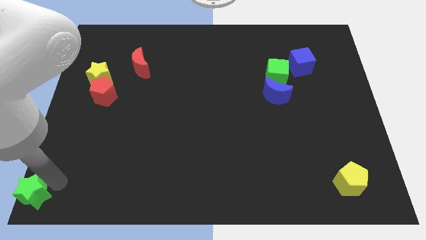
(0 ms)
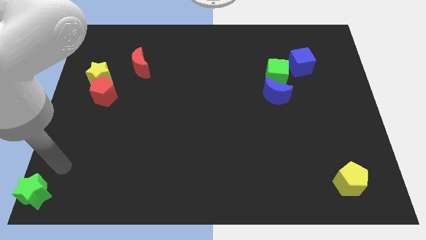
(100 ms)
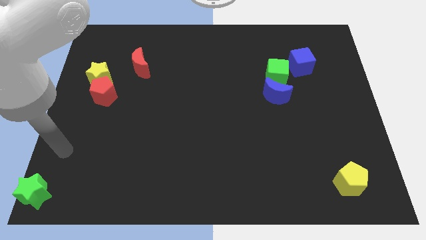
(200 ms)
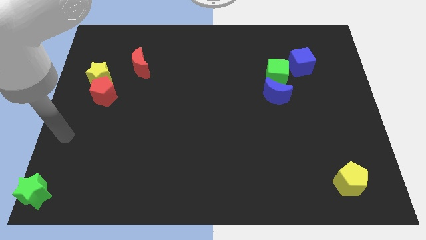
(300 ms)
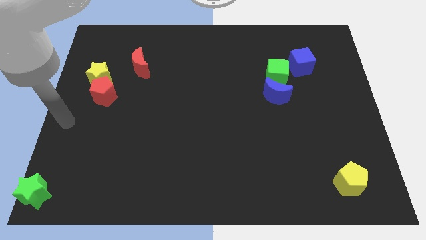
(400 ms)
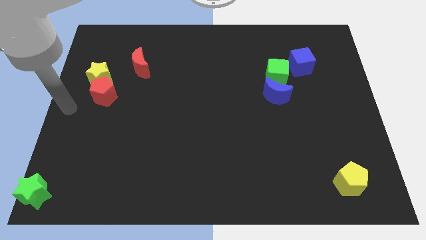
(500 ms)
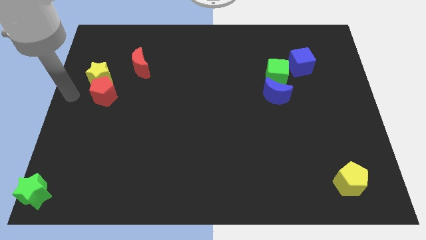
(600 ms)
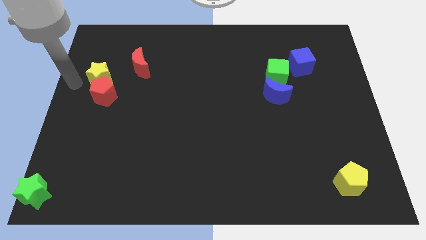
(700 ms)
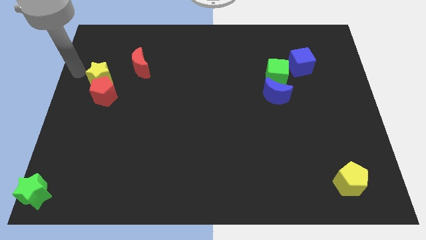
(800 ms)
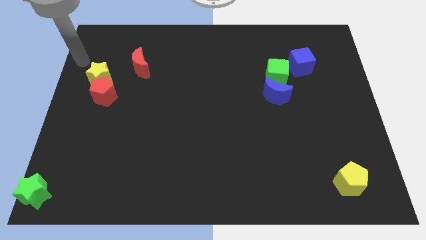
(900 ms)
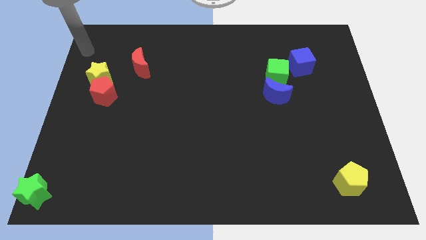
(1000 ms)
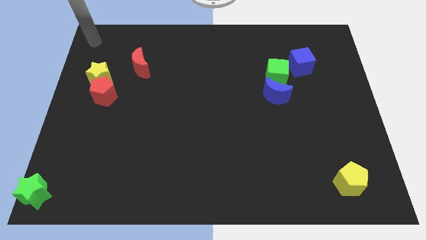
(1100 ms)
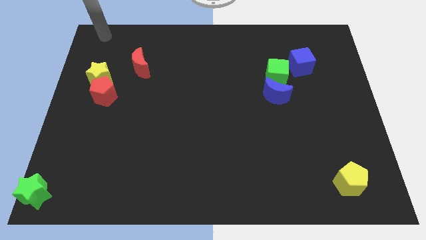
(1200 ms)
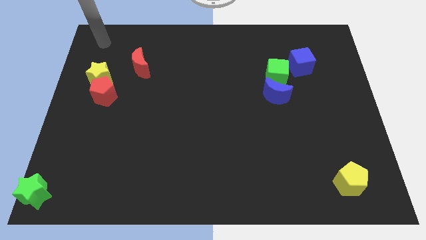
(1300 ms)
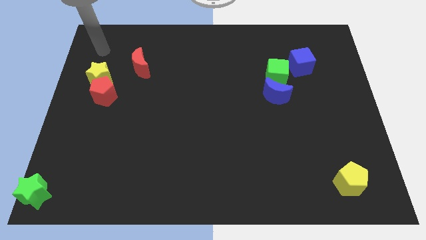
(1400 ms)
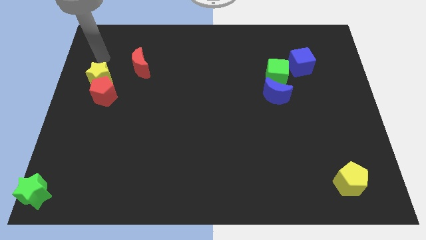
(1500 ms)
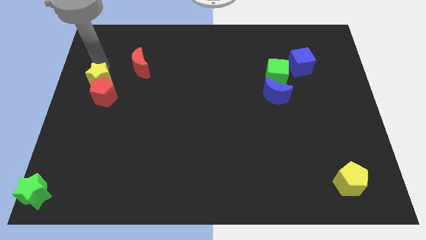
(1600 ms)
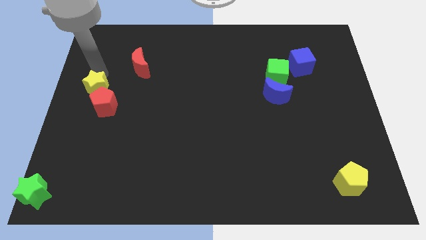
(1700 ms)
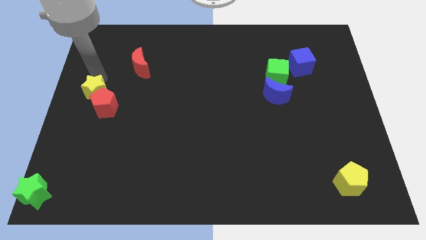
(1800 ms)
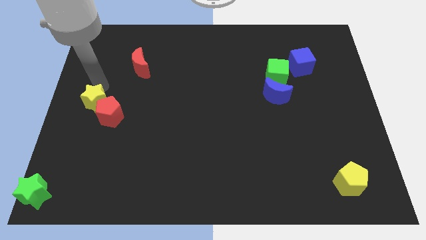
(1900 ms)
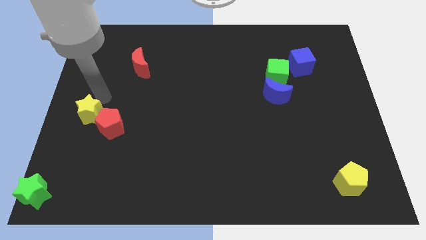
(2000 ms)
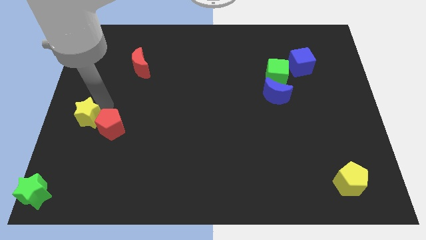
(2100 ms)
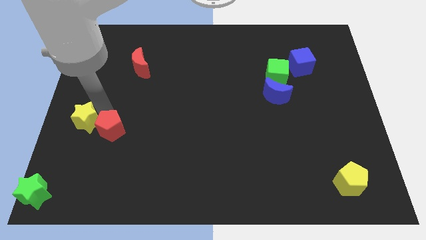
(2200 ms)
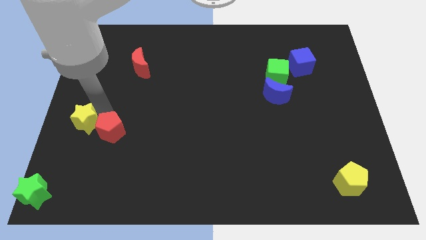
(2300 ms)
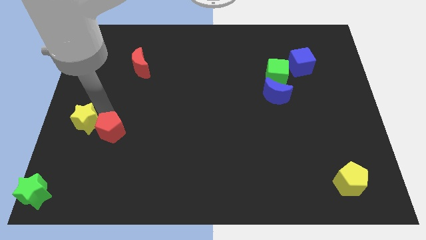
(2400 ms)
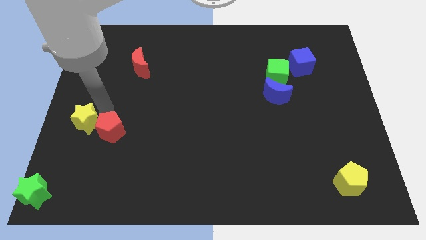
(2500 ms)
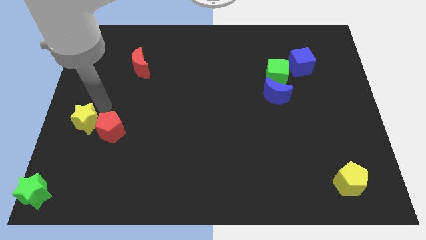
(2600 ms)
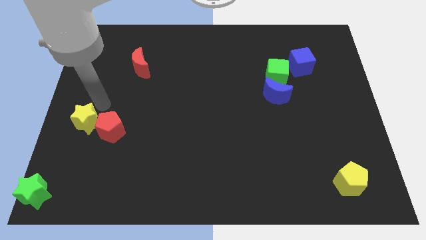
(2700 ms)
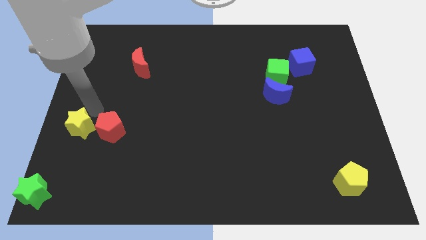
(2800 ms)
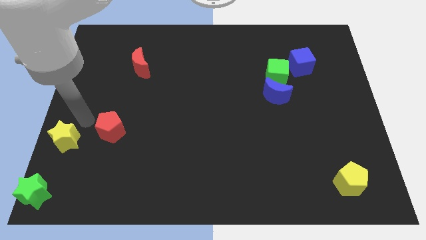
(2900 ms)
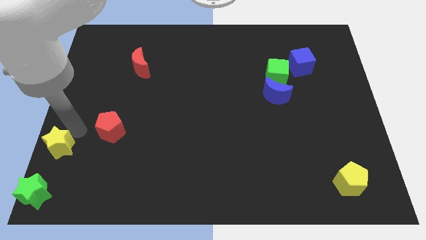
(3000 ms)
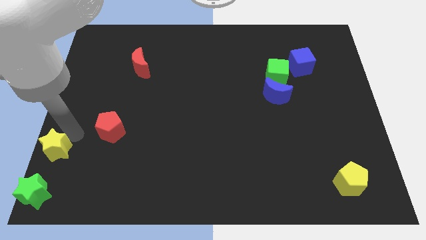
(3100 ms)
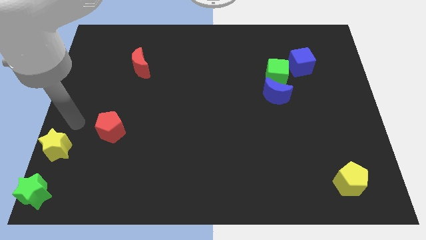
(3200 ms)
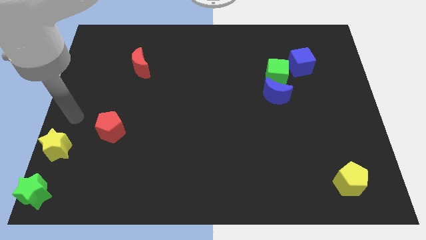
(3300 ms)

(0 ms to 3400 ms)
separate yellow star and the red pentagon

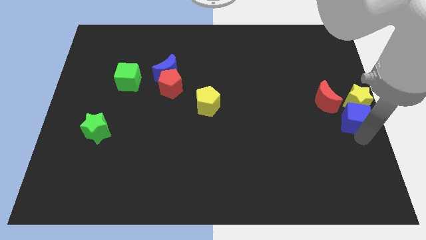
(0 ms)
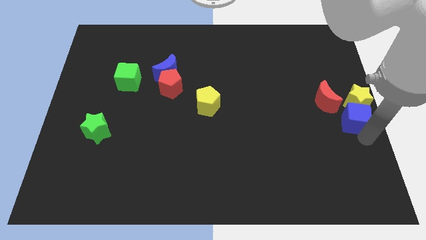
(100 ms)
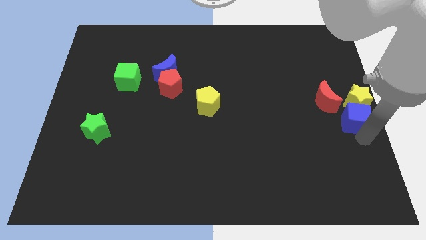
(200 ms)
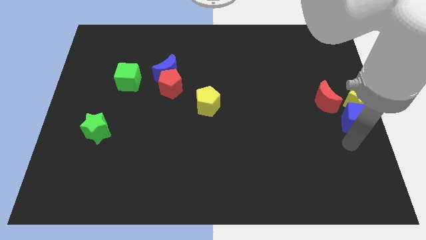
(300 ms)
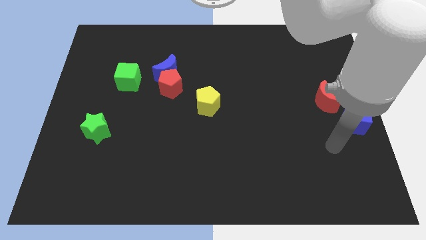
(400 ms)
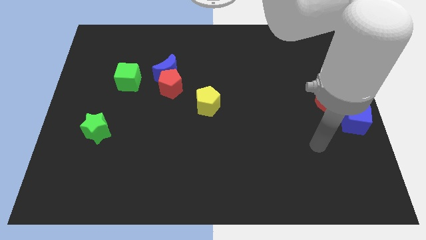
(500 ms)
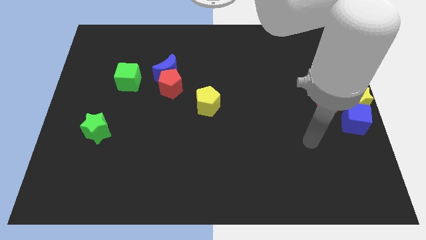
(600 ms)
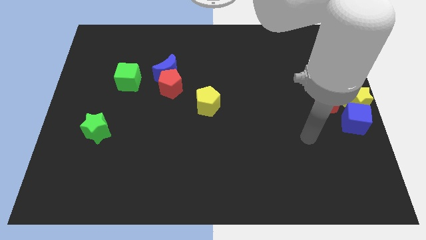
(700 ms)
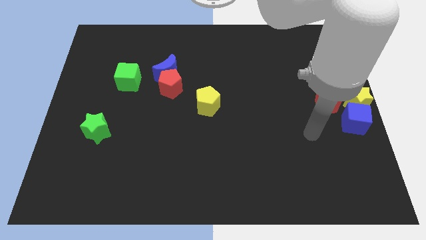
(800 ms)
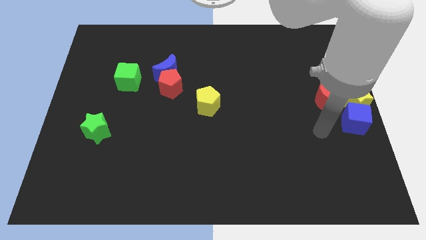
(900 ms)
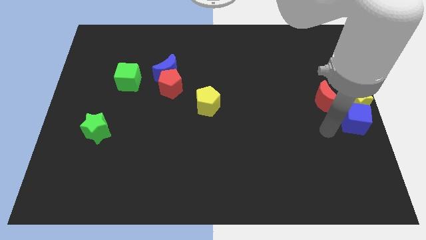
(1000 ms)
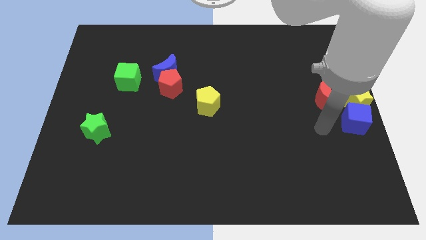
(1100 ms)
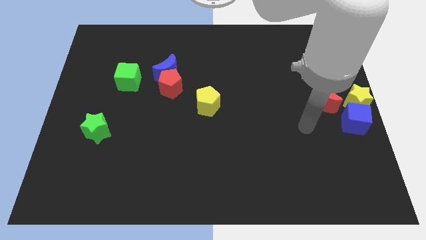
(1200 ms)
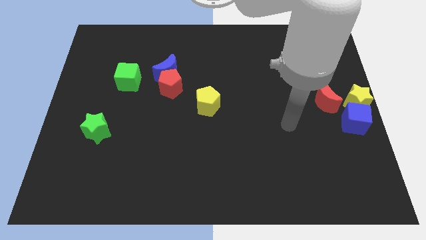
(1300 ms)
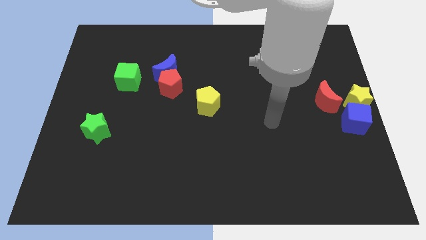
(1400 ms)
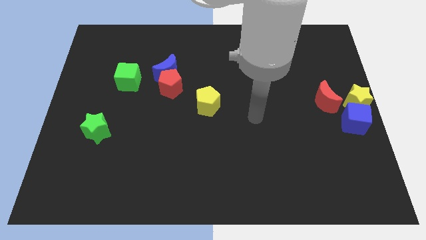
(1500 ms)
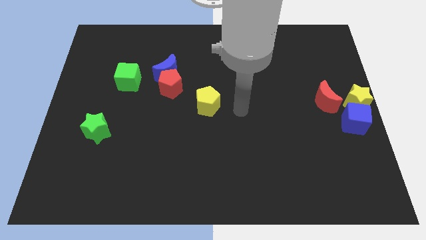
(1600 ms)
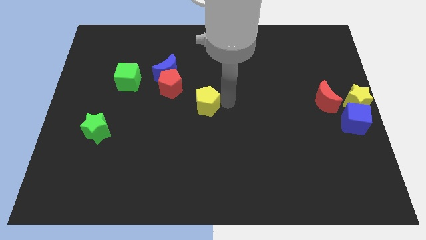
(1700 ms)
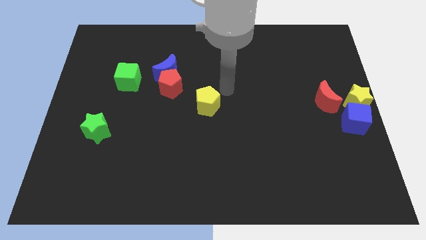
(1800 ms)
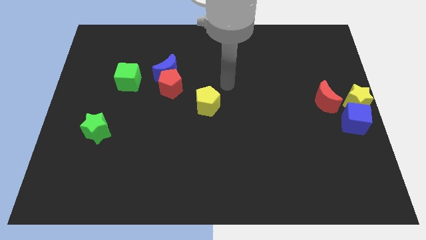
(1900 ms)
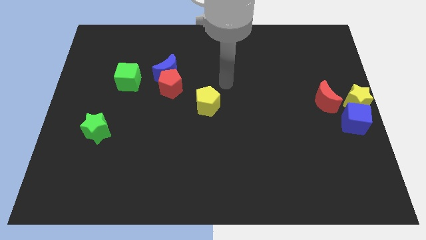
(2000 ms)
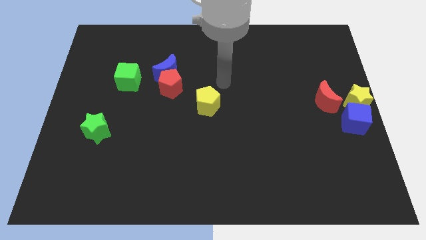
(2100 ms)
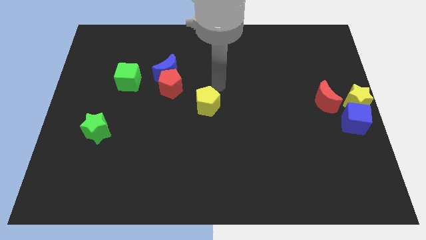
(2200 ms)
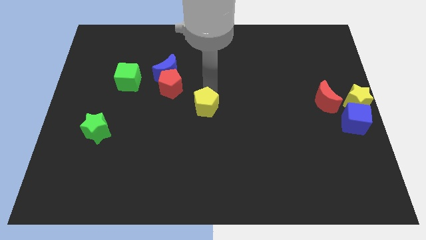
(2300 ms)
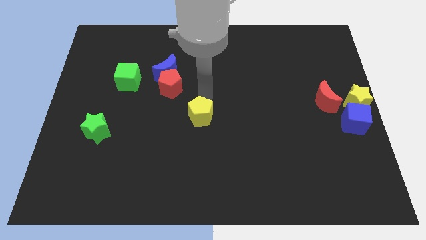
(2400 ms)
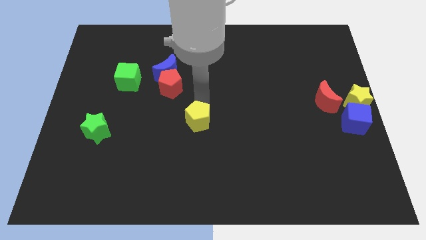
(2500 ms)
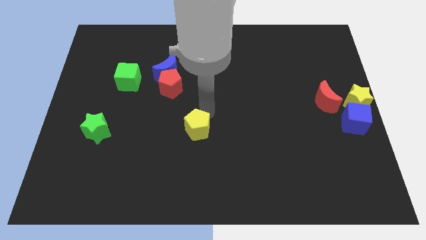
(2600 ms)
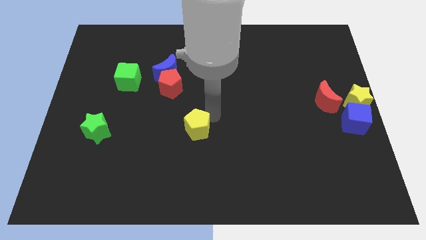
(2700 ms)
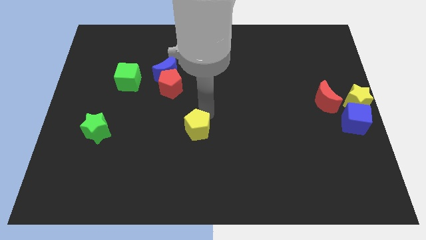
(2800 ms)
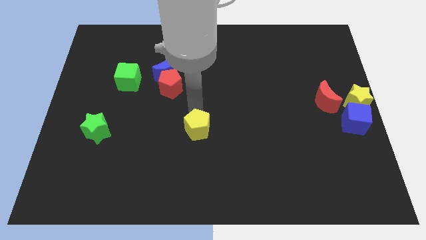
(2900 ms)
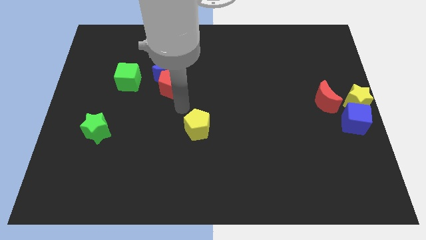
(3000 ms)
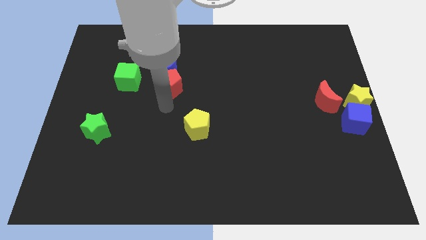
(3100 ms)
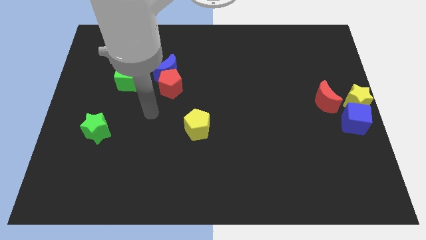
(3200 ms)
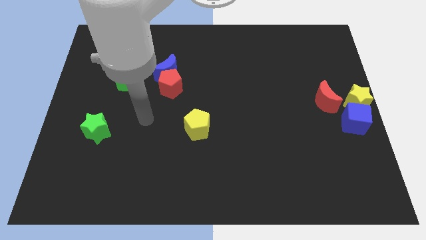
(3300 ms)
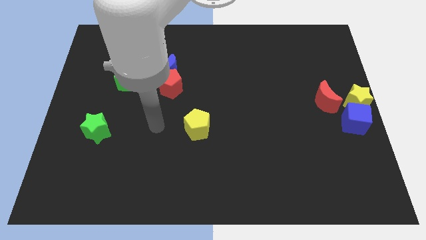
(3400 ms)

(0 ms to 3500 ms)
push the yellow pentagon slightly down

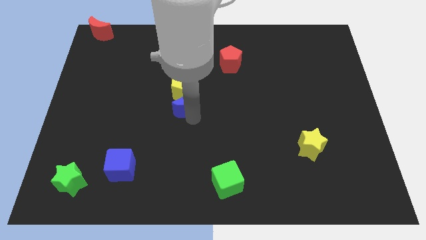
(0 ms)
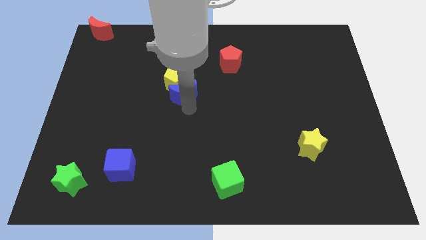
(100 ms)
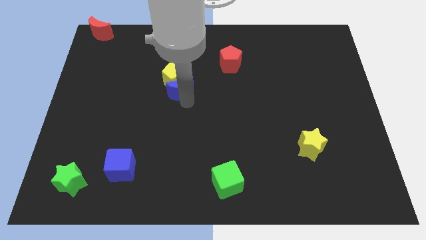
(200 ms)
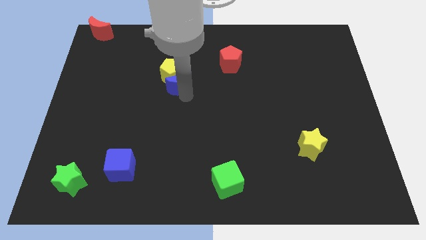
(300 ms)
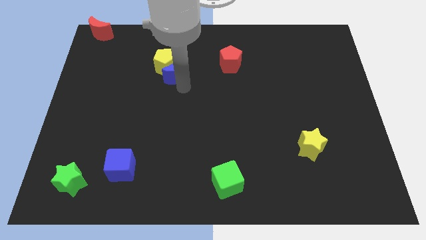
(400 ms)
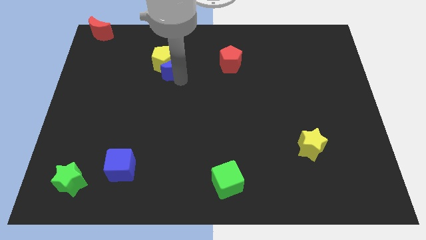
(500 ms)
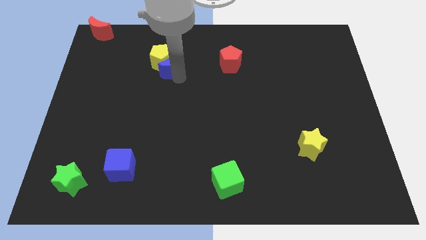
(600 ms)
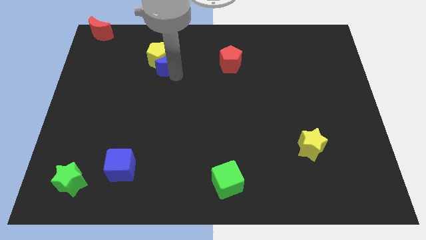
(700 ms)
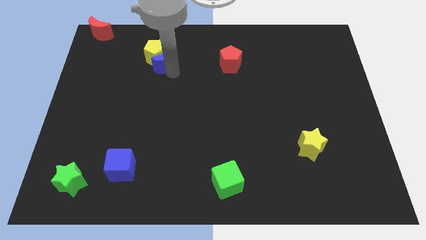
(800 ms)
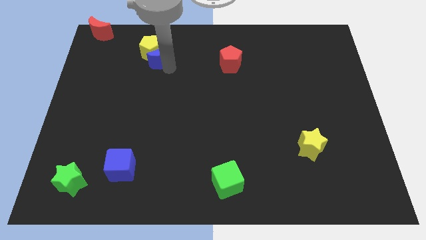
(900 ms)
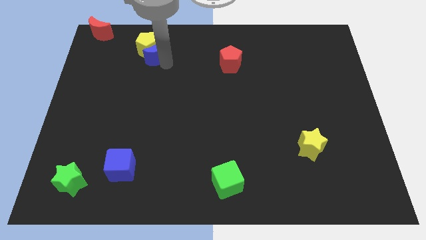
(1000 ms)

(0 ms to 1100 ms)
drag the blue moon to the top left

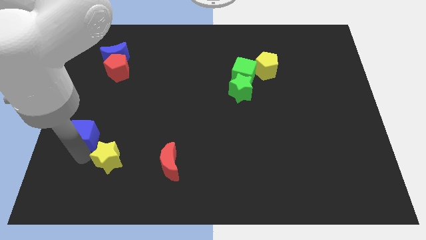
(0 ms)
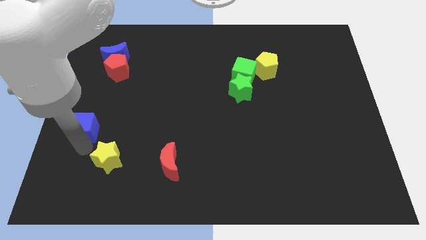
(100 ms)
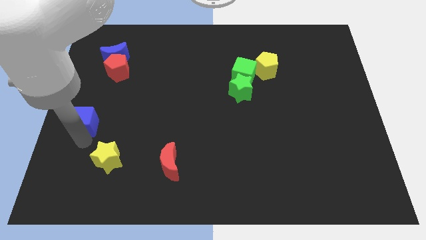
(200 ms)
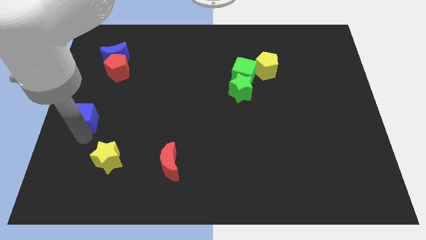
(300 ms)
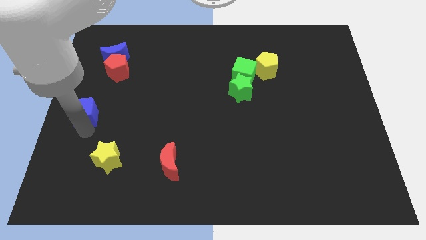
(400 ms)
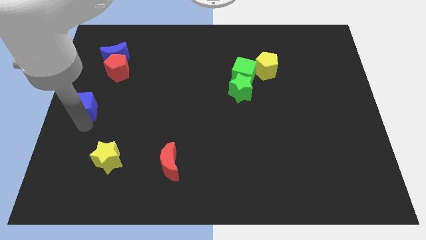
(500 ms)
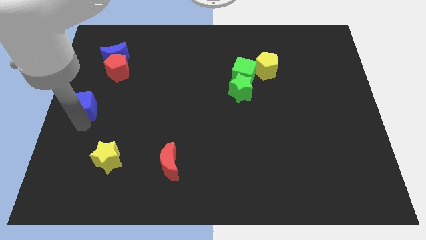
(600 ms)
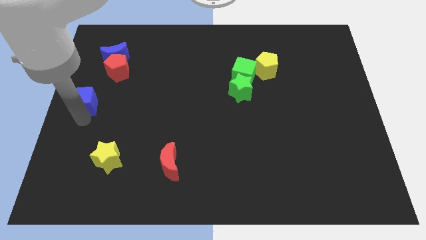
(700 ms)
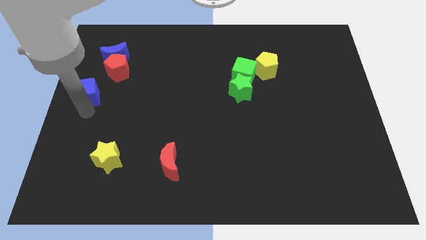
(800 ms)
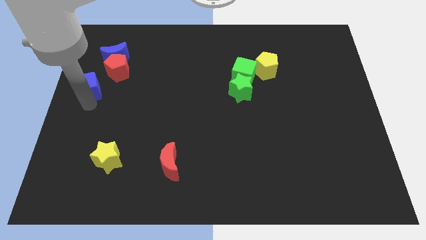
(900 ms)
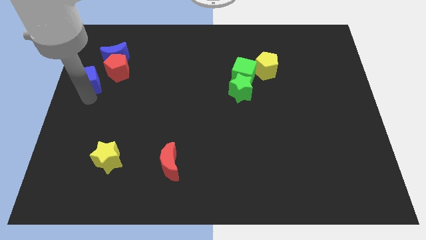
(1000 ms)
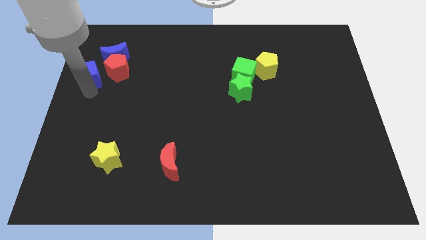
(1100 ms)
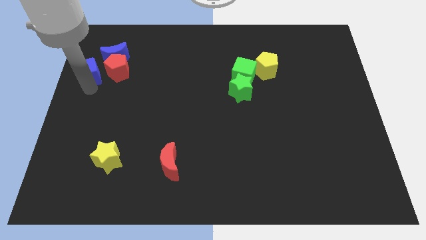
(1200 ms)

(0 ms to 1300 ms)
move the blue cube to the left side of the red pentagon
